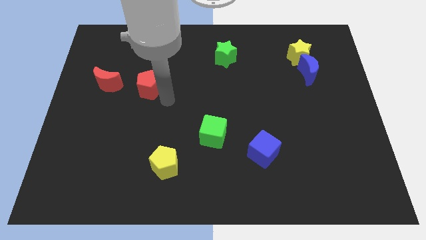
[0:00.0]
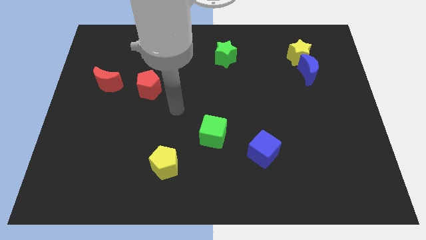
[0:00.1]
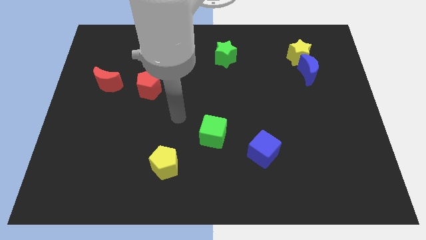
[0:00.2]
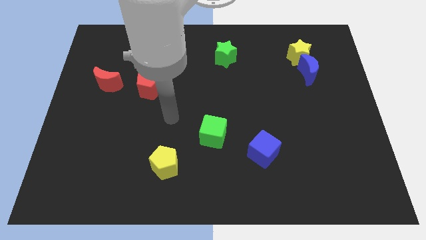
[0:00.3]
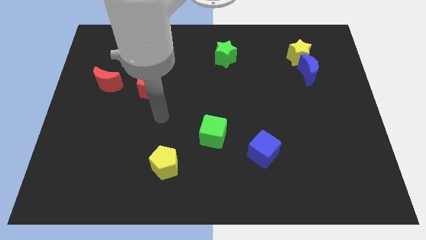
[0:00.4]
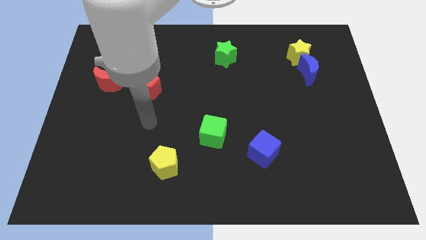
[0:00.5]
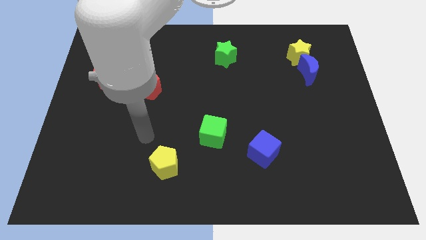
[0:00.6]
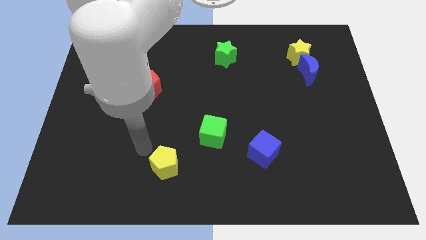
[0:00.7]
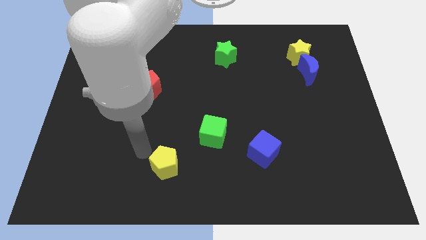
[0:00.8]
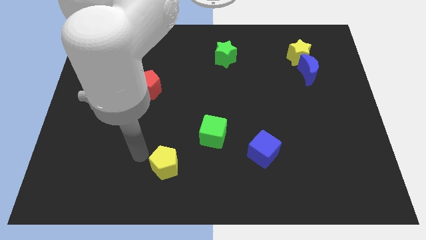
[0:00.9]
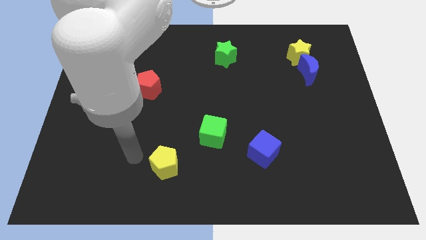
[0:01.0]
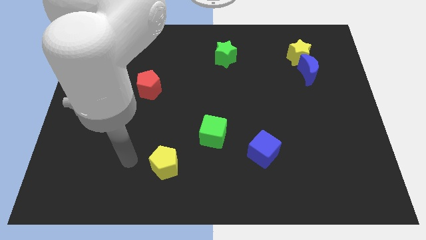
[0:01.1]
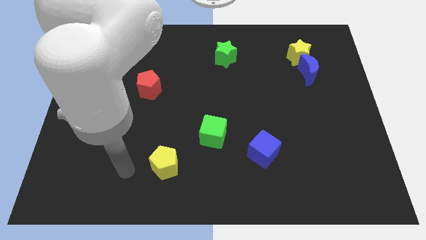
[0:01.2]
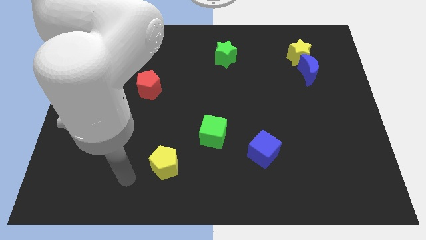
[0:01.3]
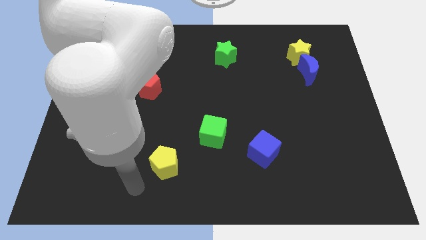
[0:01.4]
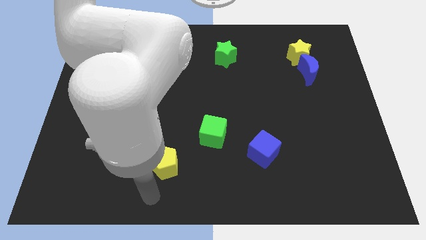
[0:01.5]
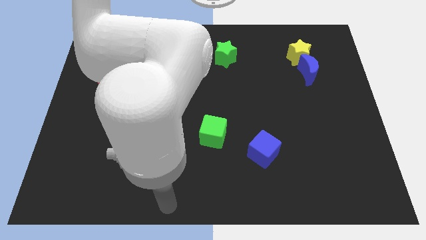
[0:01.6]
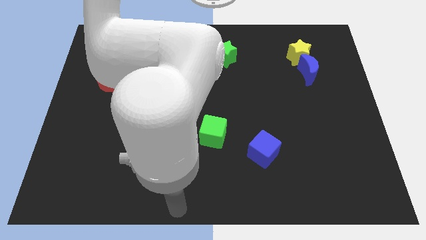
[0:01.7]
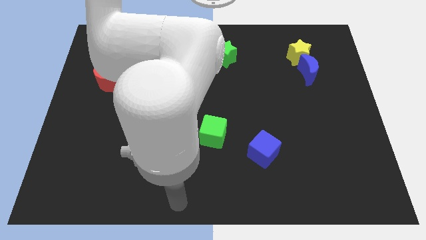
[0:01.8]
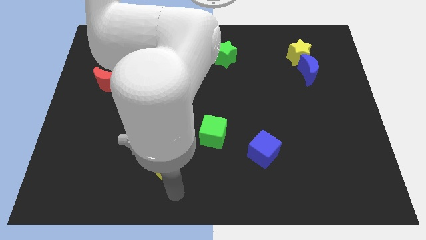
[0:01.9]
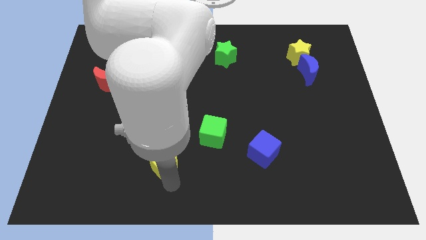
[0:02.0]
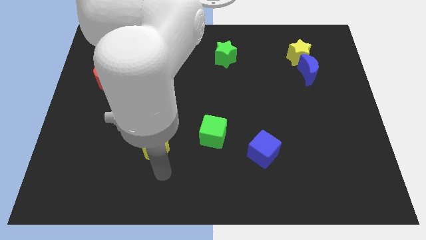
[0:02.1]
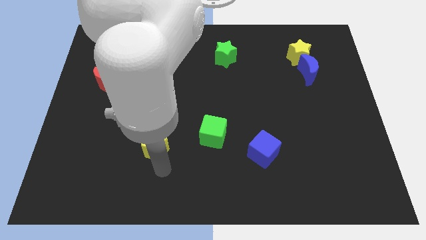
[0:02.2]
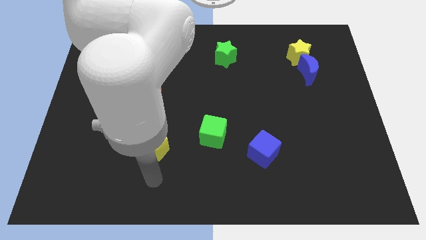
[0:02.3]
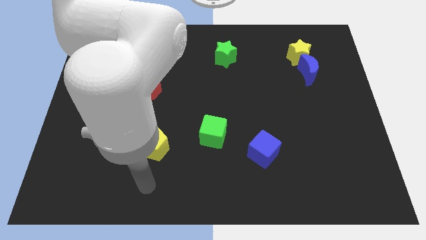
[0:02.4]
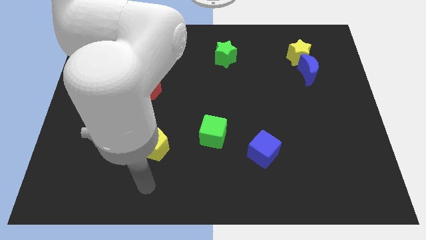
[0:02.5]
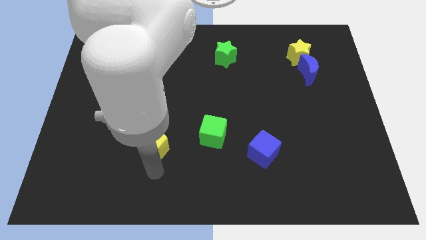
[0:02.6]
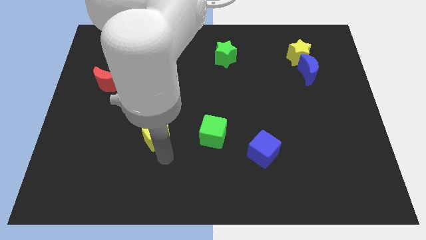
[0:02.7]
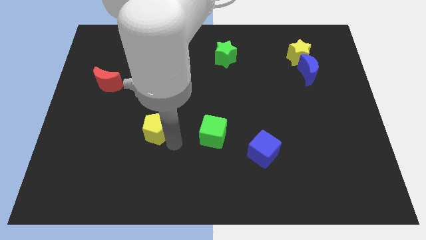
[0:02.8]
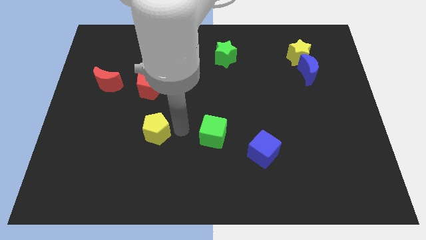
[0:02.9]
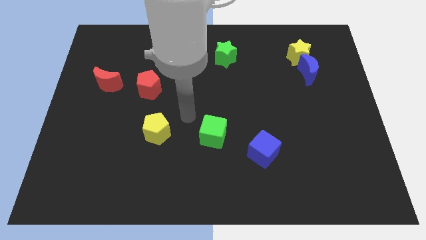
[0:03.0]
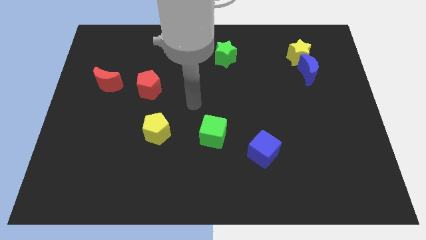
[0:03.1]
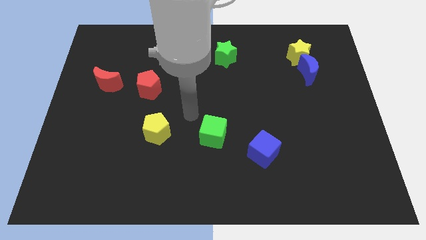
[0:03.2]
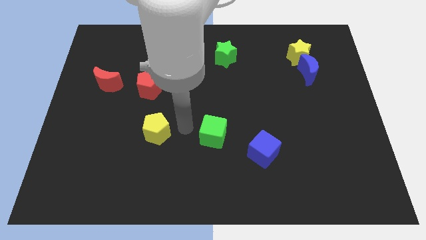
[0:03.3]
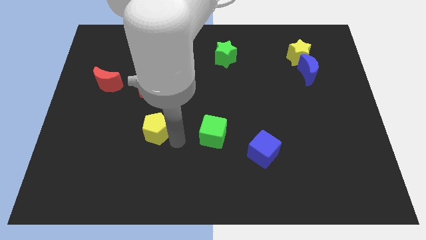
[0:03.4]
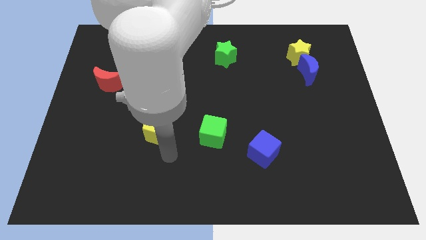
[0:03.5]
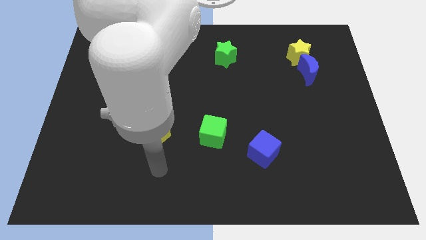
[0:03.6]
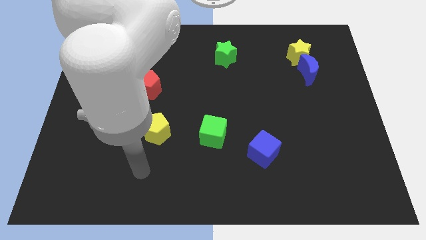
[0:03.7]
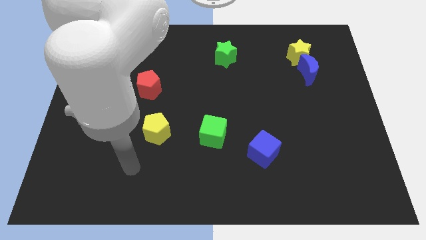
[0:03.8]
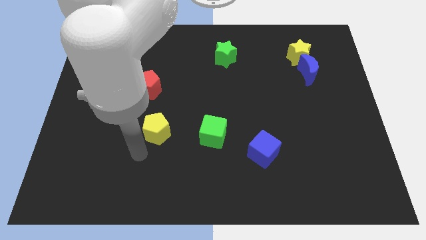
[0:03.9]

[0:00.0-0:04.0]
push yellow pentagon parallel left to the green cube

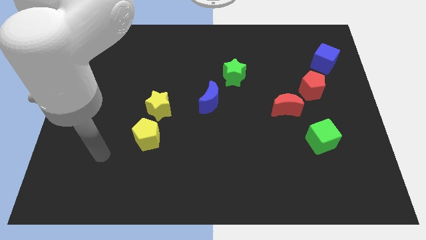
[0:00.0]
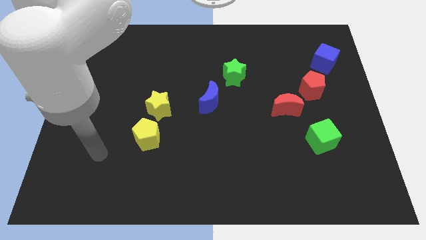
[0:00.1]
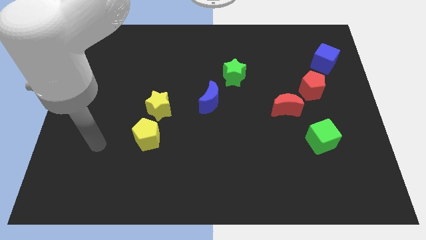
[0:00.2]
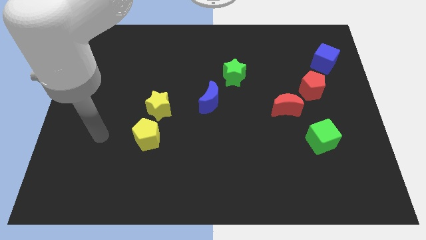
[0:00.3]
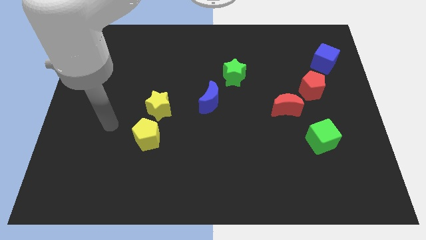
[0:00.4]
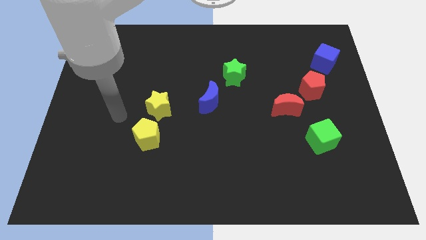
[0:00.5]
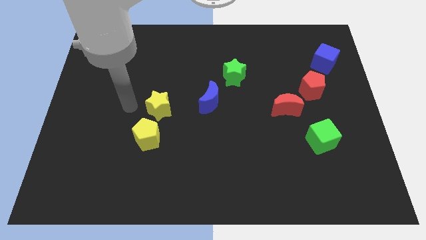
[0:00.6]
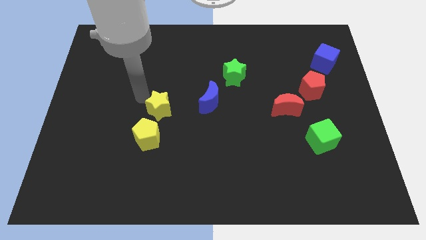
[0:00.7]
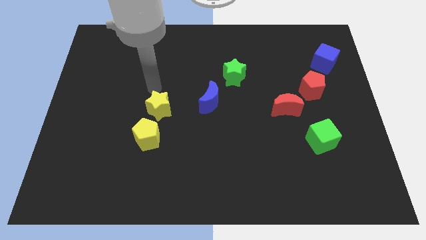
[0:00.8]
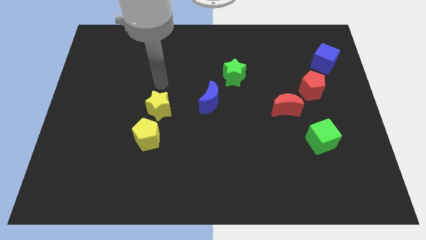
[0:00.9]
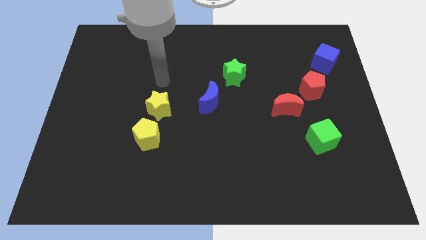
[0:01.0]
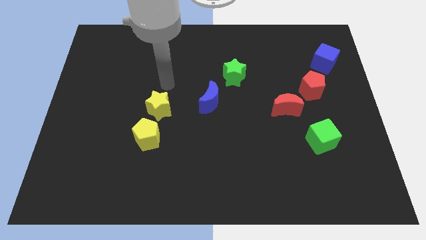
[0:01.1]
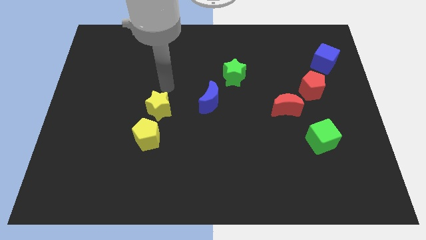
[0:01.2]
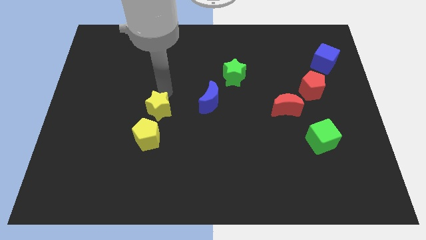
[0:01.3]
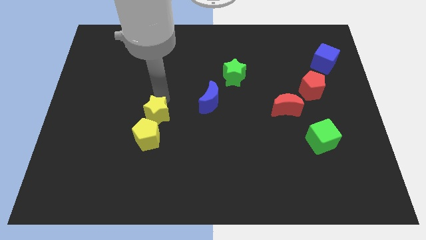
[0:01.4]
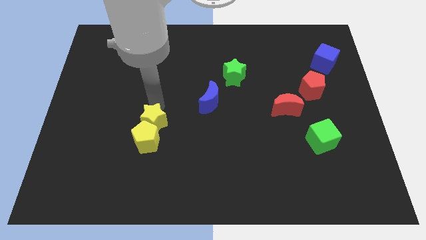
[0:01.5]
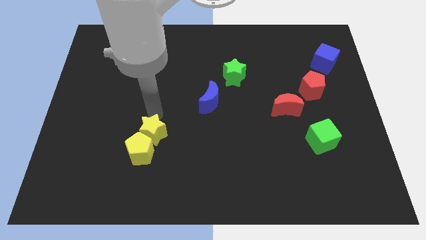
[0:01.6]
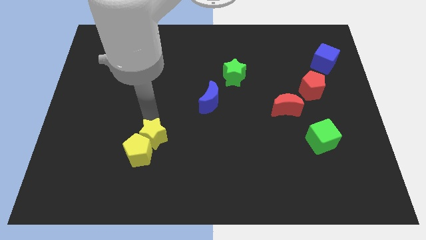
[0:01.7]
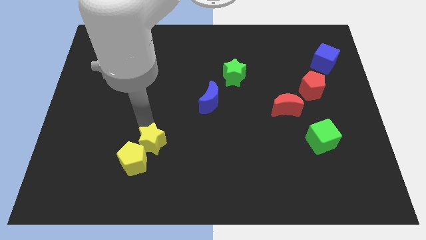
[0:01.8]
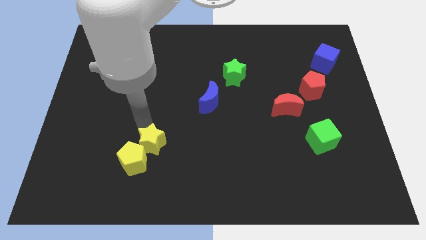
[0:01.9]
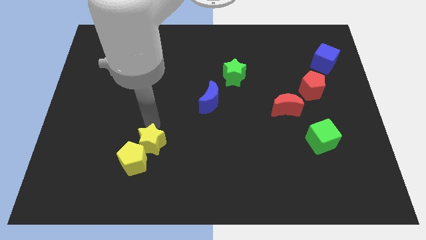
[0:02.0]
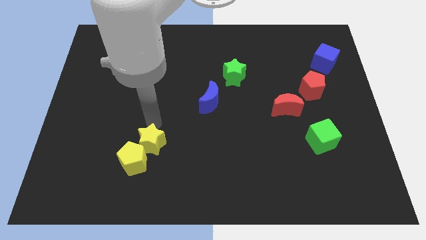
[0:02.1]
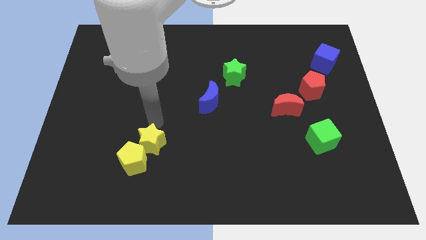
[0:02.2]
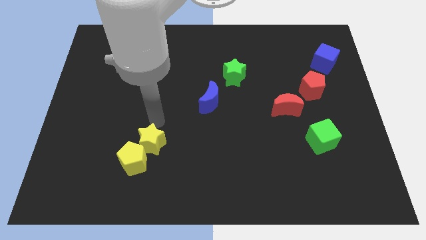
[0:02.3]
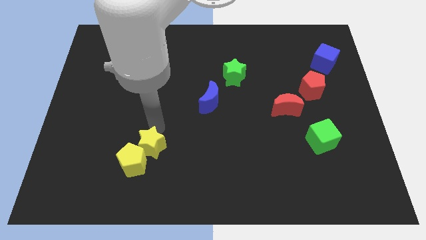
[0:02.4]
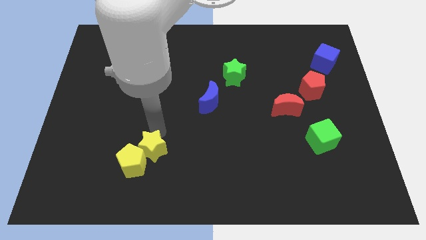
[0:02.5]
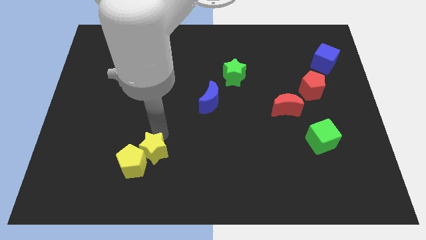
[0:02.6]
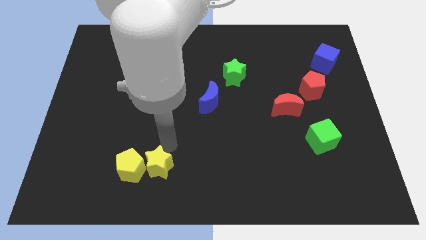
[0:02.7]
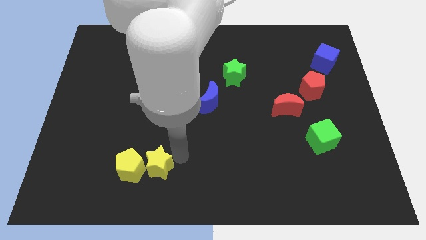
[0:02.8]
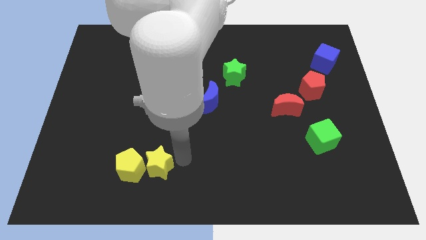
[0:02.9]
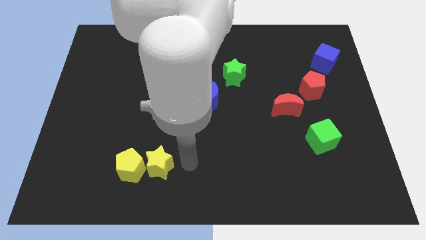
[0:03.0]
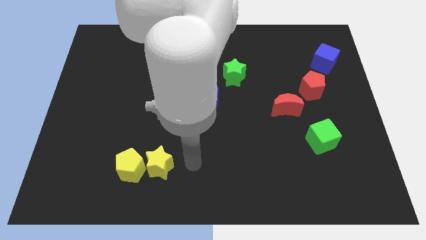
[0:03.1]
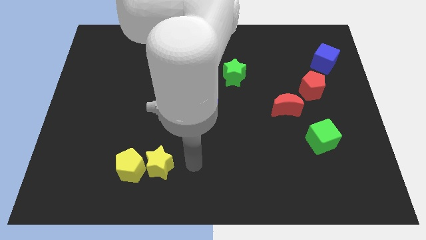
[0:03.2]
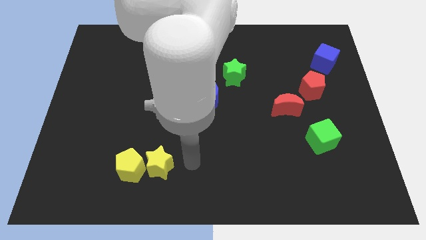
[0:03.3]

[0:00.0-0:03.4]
push yellow star towards bottom

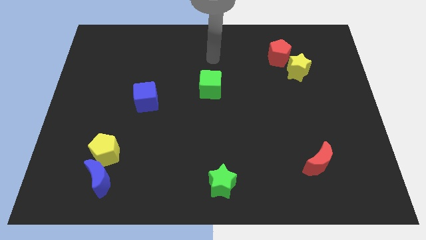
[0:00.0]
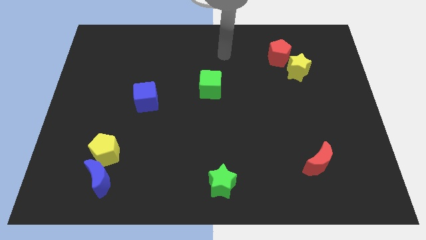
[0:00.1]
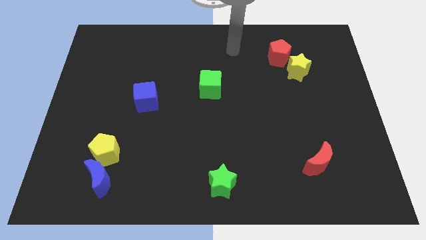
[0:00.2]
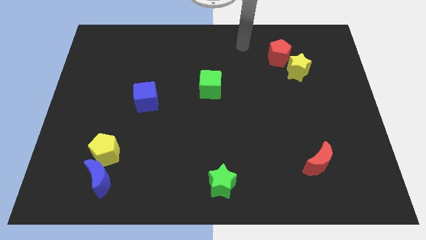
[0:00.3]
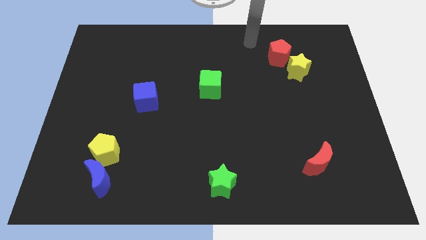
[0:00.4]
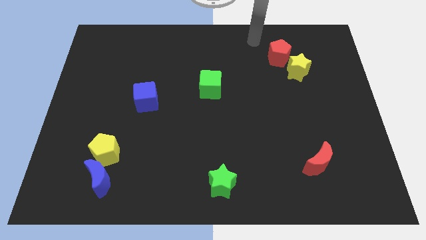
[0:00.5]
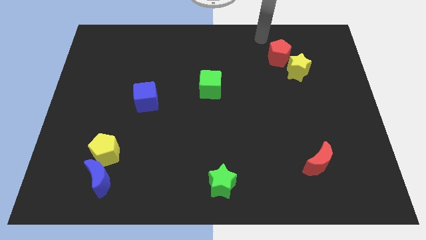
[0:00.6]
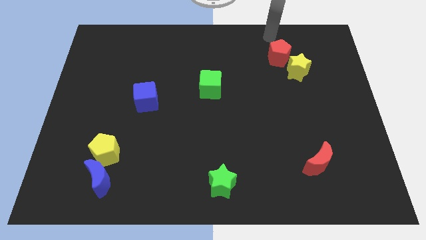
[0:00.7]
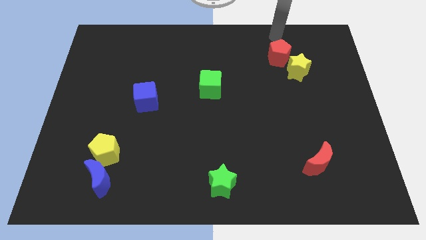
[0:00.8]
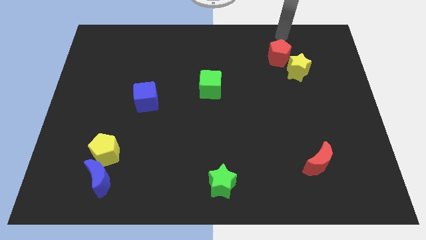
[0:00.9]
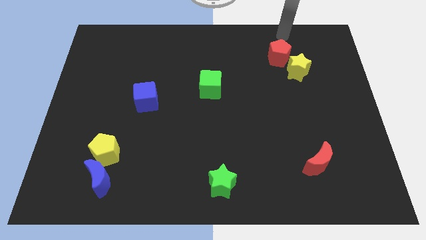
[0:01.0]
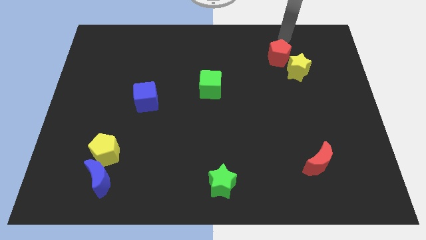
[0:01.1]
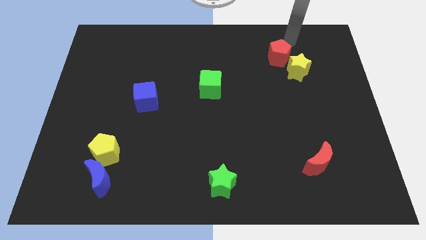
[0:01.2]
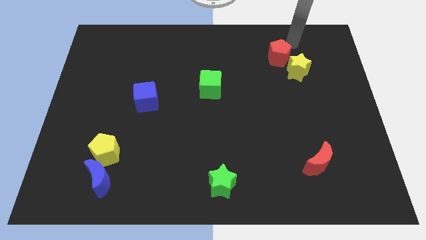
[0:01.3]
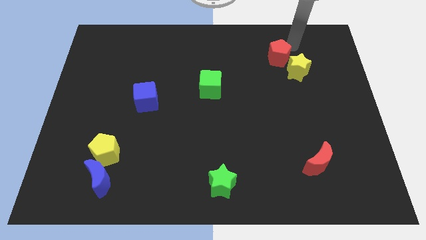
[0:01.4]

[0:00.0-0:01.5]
move your arm towards the top right side of the board

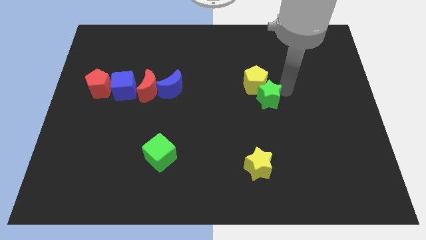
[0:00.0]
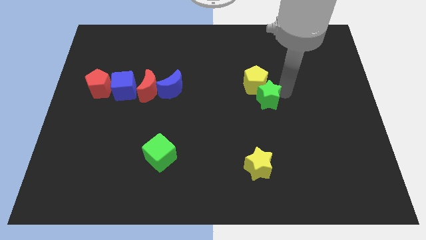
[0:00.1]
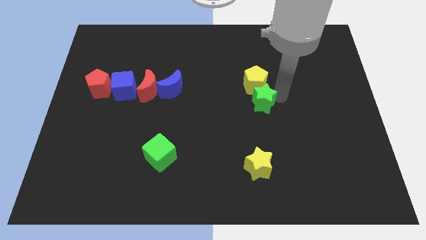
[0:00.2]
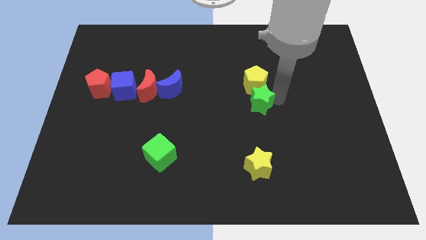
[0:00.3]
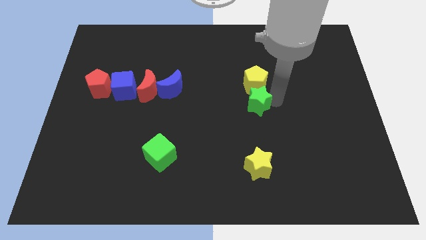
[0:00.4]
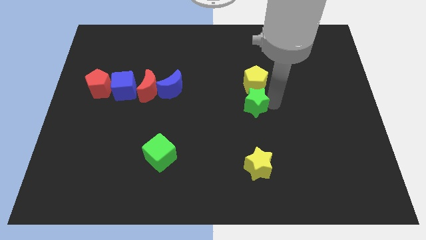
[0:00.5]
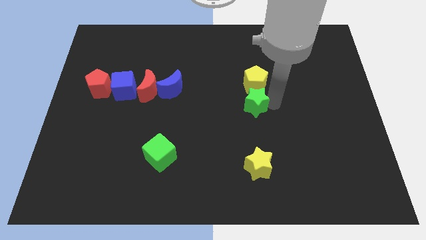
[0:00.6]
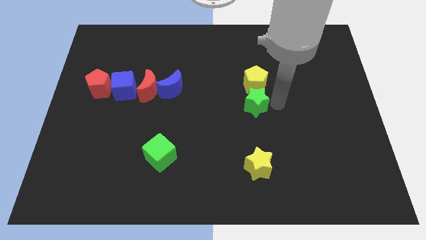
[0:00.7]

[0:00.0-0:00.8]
move the green star below the yellow pentagon
